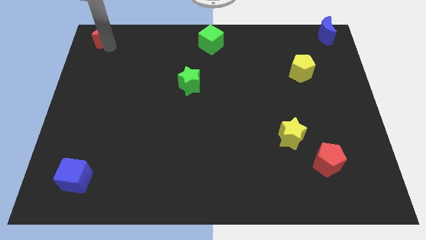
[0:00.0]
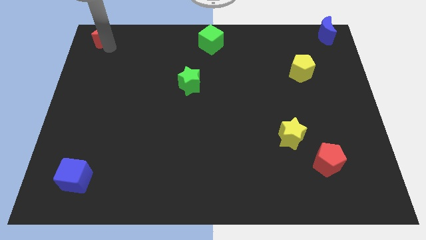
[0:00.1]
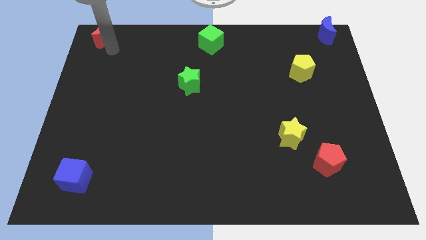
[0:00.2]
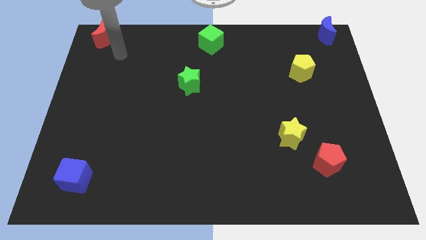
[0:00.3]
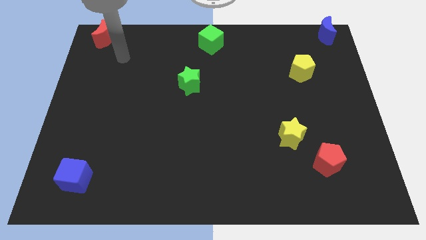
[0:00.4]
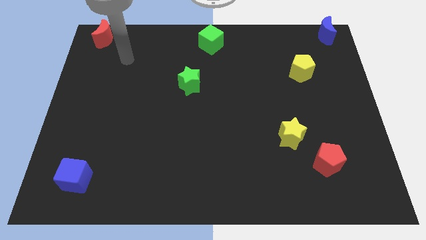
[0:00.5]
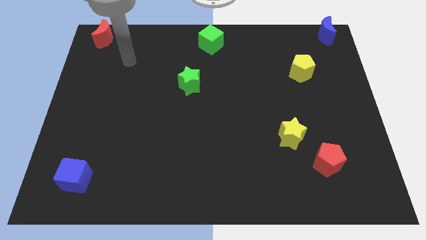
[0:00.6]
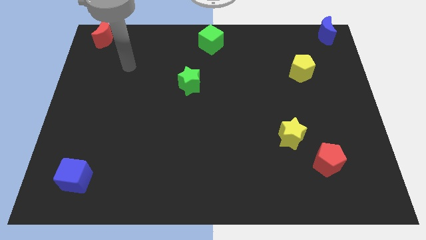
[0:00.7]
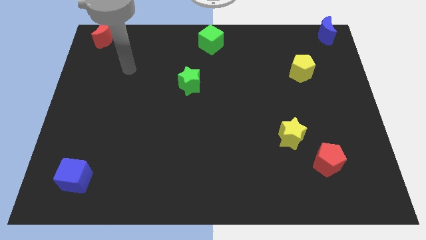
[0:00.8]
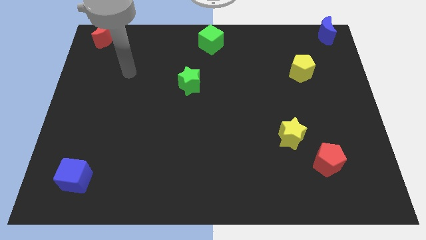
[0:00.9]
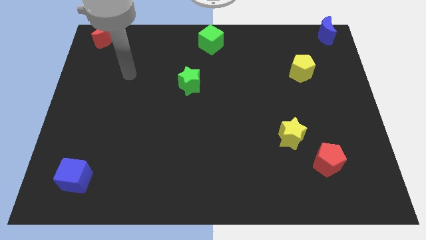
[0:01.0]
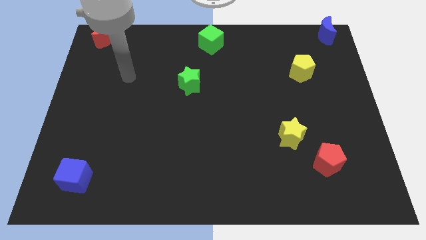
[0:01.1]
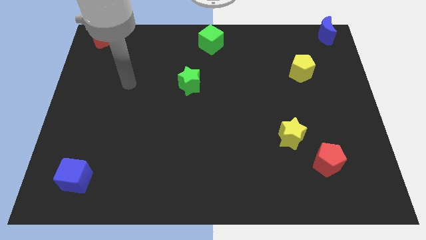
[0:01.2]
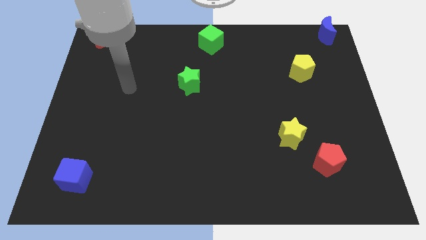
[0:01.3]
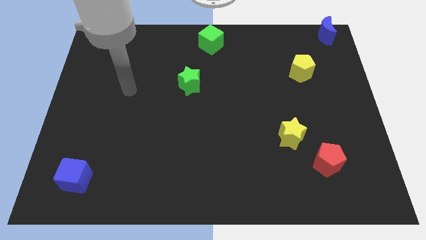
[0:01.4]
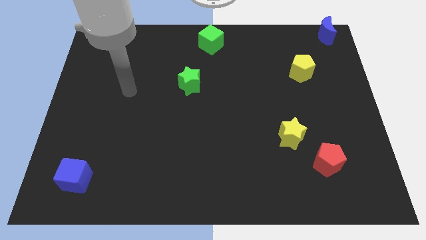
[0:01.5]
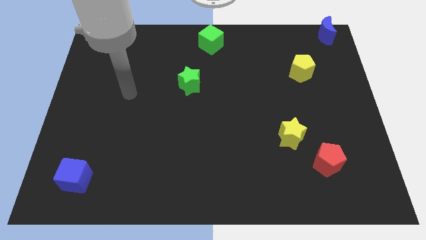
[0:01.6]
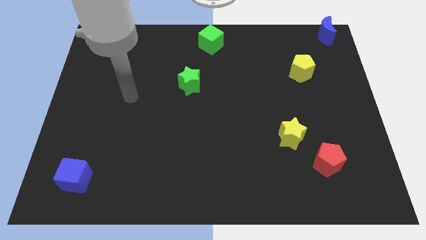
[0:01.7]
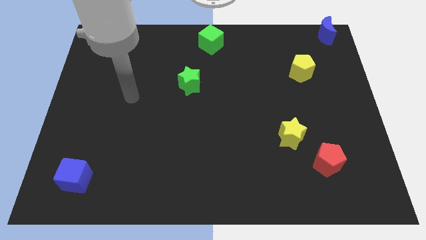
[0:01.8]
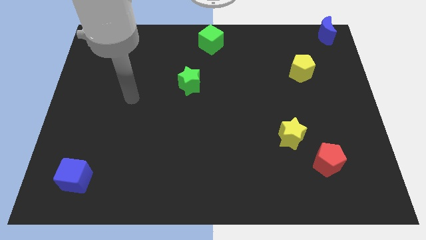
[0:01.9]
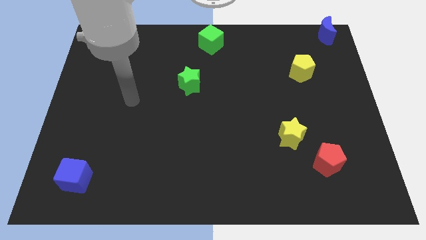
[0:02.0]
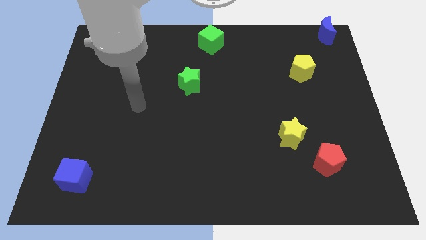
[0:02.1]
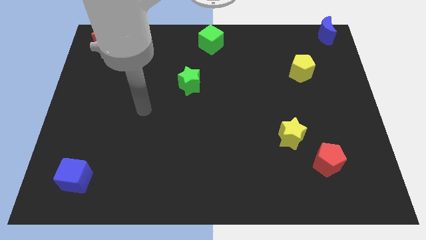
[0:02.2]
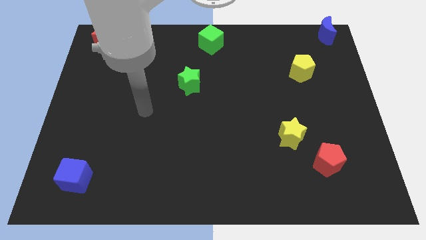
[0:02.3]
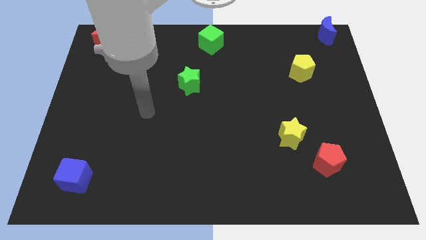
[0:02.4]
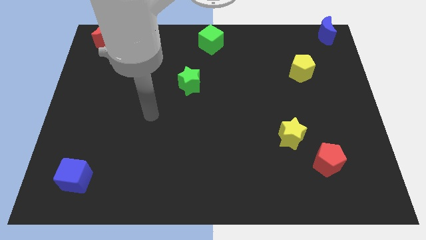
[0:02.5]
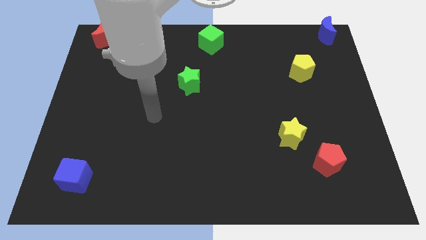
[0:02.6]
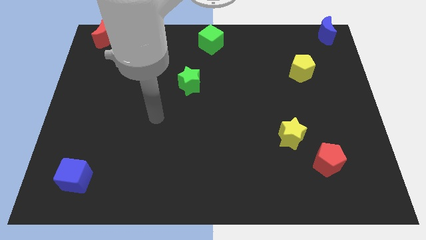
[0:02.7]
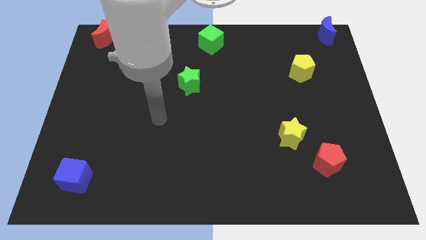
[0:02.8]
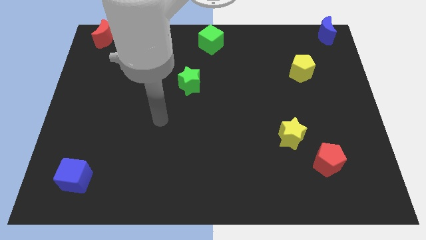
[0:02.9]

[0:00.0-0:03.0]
move the arm diagonally down

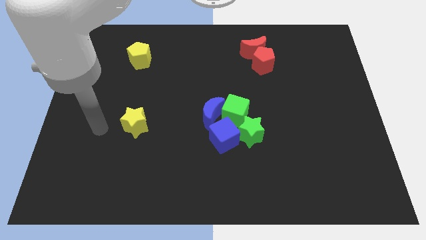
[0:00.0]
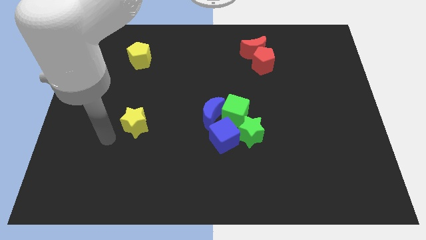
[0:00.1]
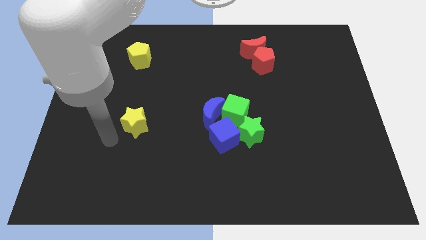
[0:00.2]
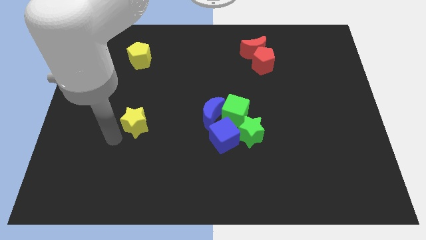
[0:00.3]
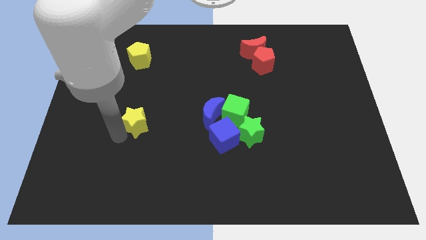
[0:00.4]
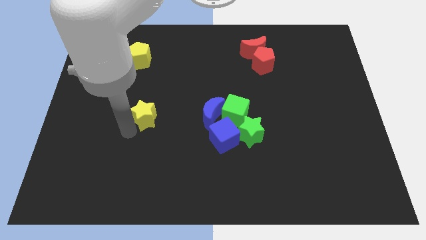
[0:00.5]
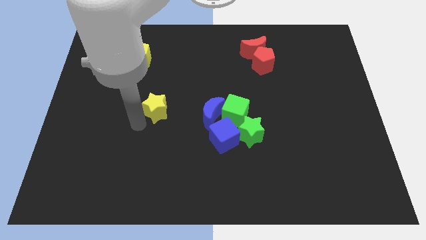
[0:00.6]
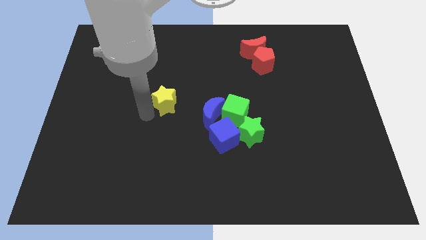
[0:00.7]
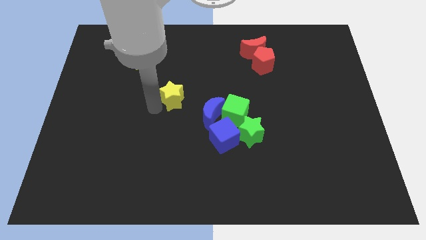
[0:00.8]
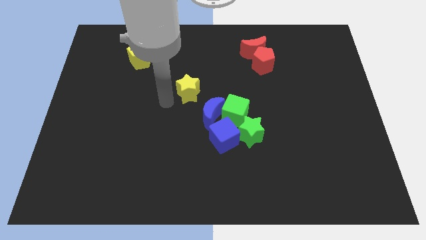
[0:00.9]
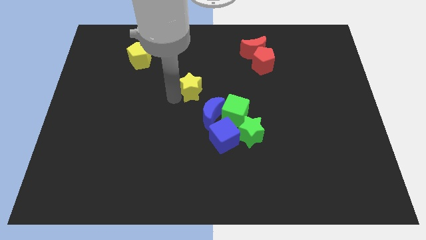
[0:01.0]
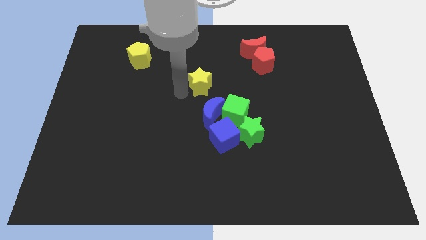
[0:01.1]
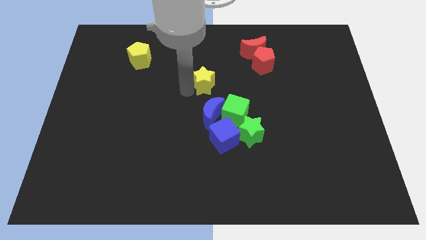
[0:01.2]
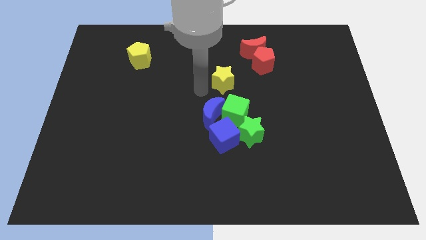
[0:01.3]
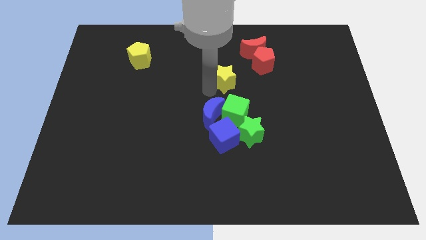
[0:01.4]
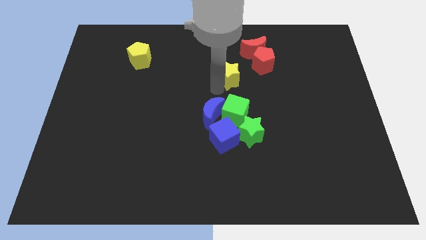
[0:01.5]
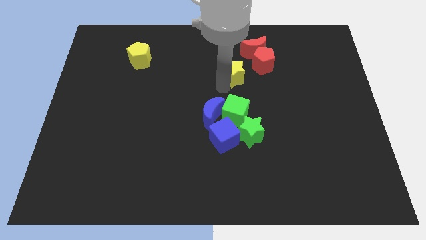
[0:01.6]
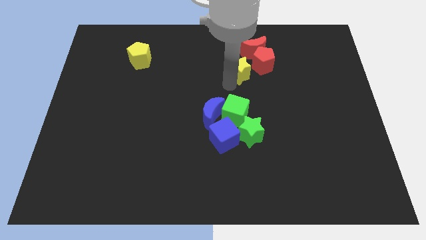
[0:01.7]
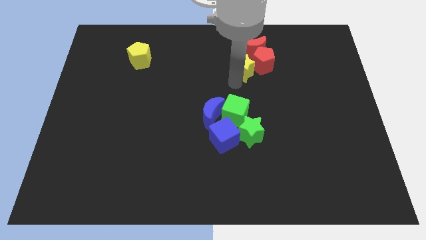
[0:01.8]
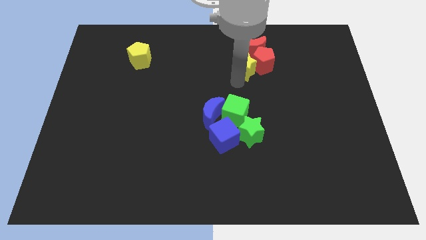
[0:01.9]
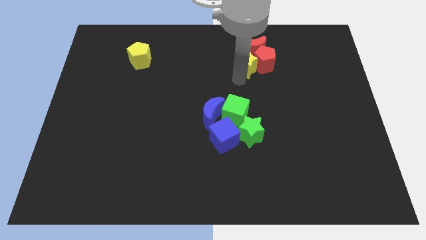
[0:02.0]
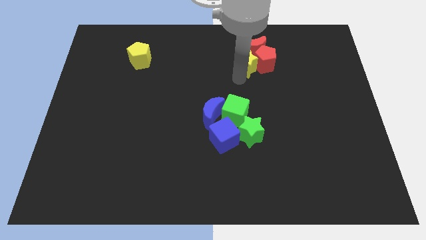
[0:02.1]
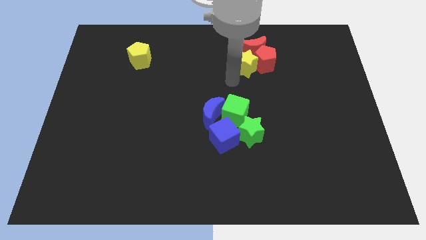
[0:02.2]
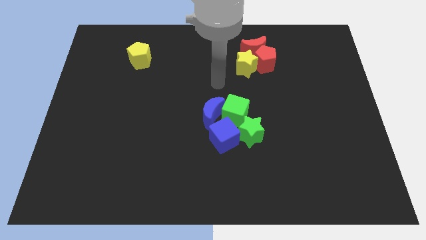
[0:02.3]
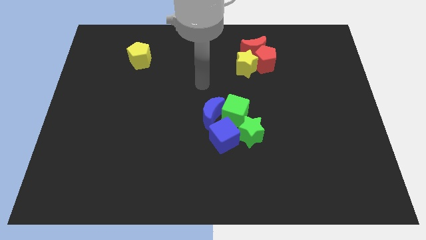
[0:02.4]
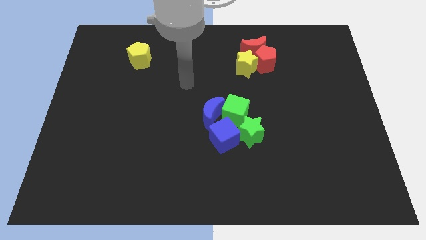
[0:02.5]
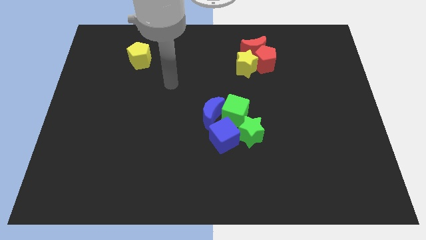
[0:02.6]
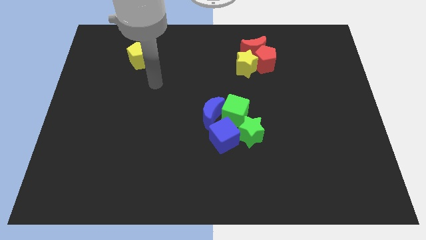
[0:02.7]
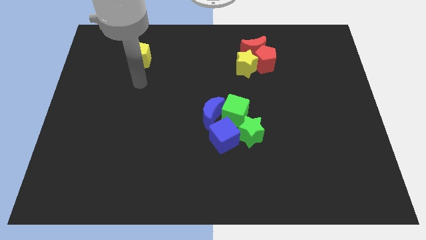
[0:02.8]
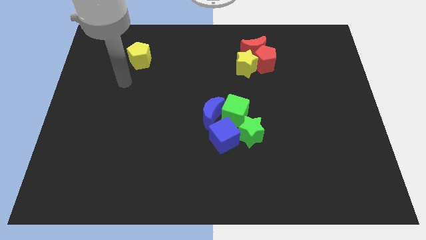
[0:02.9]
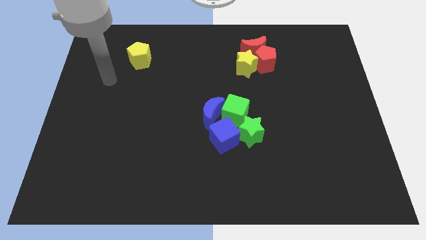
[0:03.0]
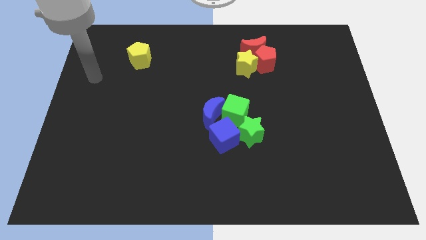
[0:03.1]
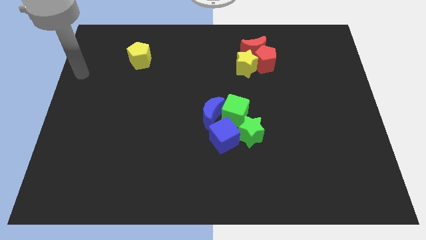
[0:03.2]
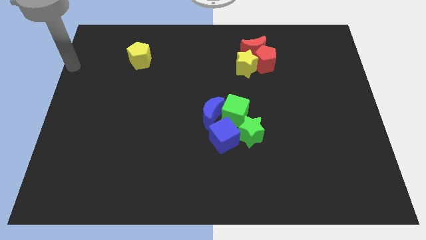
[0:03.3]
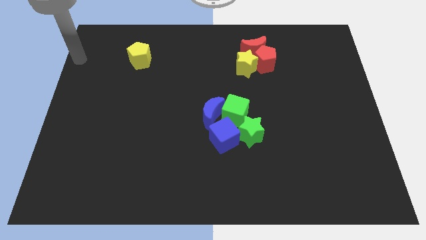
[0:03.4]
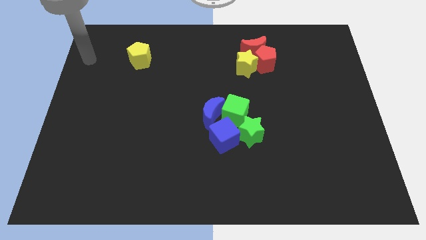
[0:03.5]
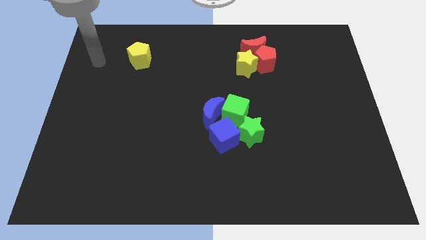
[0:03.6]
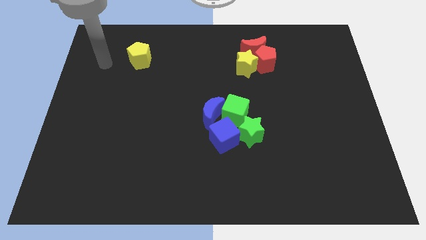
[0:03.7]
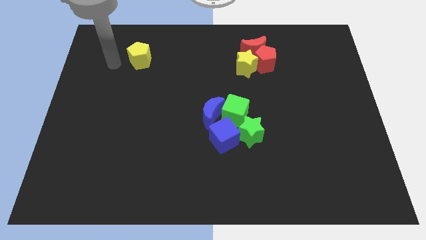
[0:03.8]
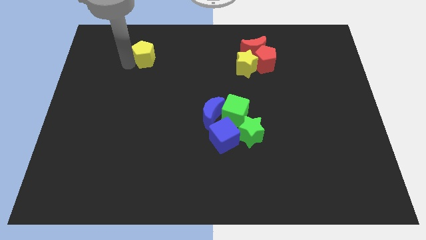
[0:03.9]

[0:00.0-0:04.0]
place the arm left to the yellow pentagon

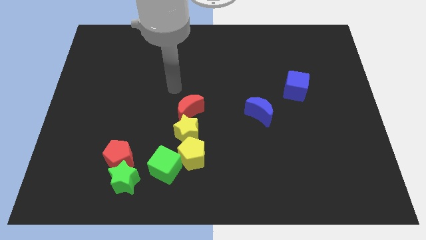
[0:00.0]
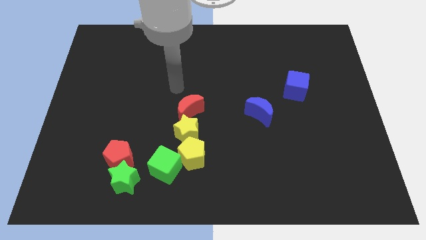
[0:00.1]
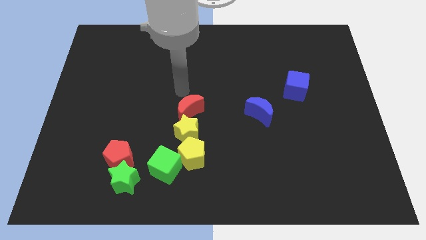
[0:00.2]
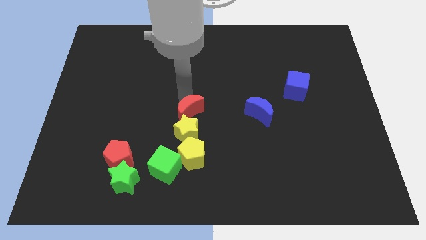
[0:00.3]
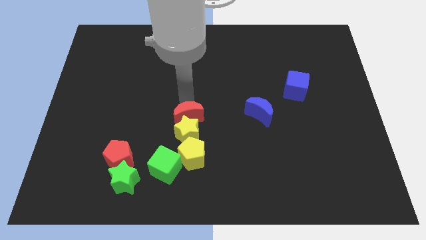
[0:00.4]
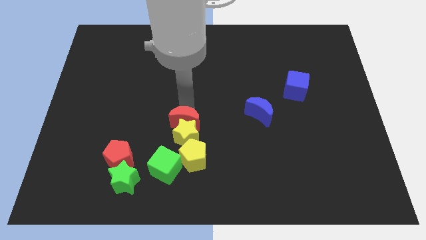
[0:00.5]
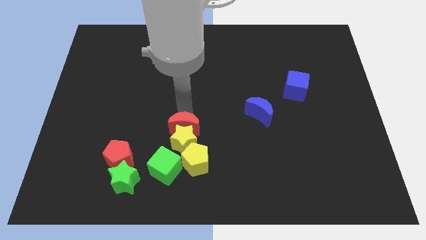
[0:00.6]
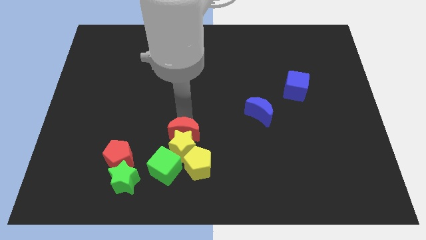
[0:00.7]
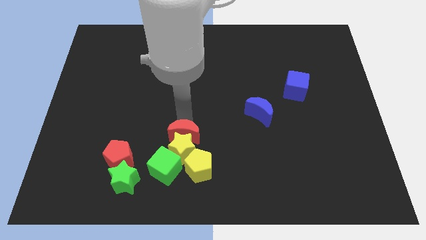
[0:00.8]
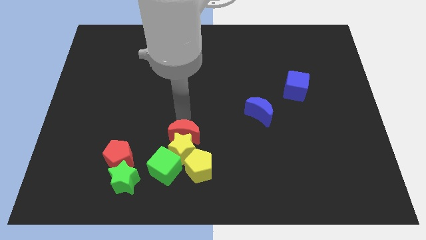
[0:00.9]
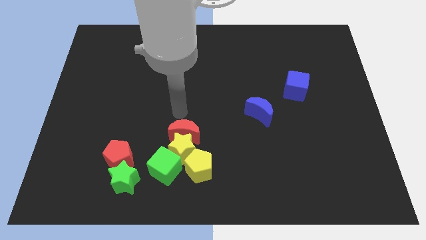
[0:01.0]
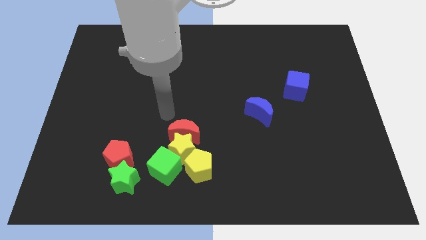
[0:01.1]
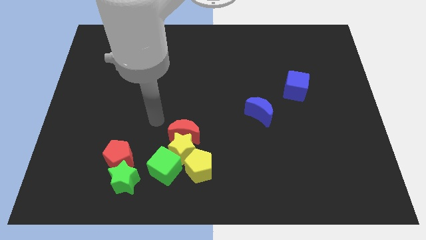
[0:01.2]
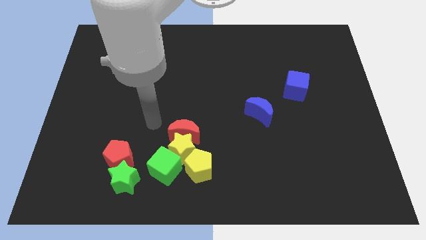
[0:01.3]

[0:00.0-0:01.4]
move the red crescent towards down

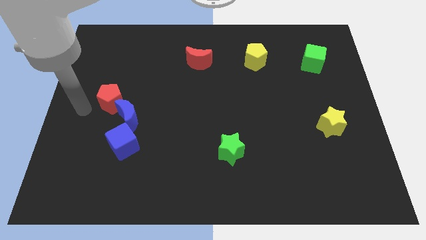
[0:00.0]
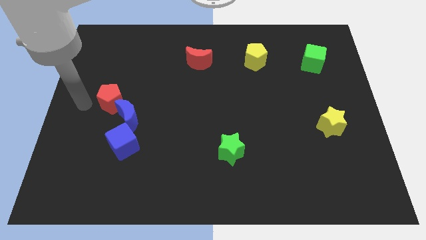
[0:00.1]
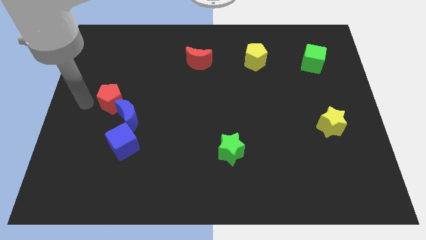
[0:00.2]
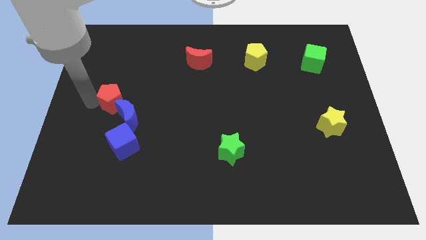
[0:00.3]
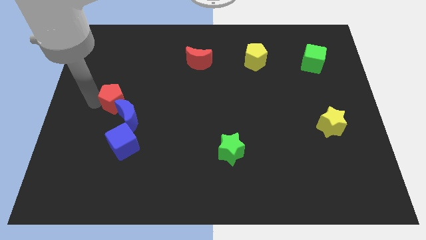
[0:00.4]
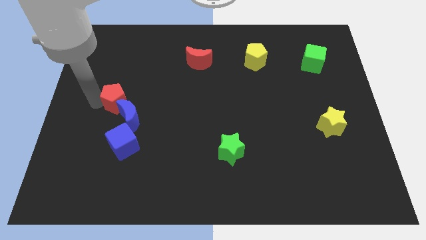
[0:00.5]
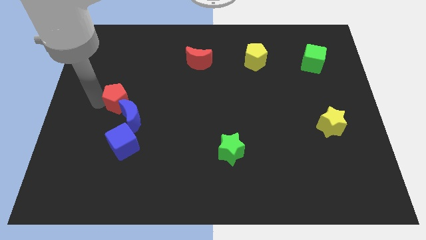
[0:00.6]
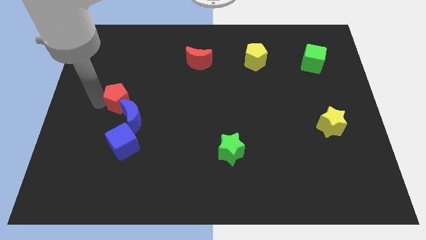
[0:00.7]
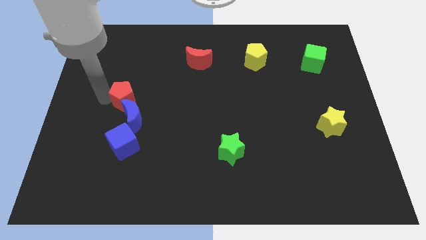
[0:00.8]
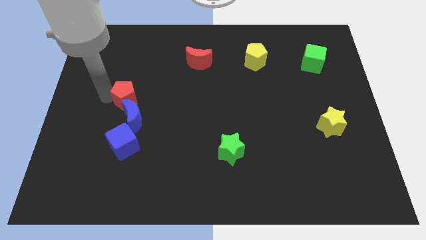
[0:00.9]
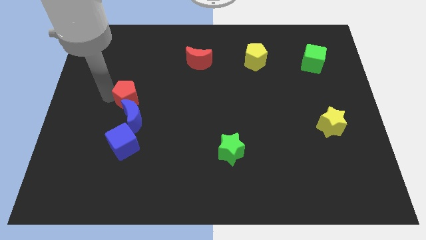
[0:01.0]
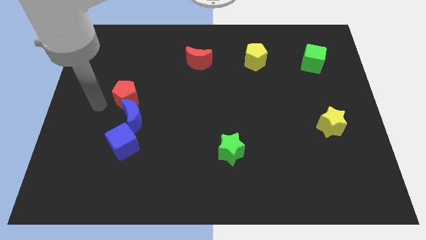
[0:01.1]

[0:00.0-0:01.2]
adjust the red pentagon to the top of the blue crescent
